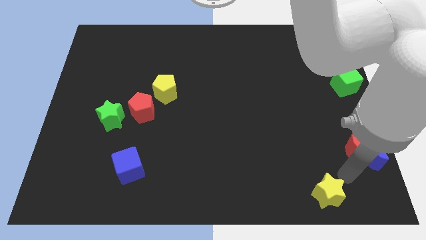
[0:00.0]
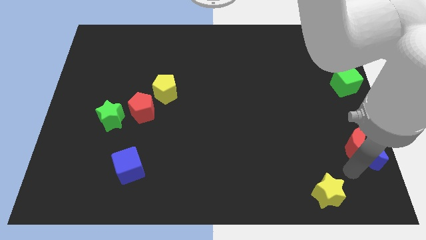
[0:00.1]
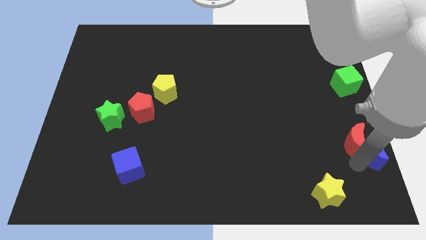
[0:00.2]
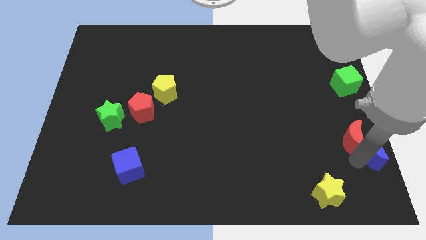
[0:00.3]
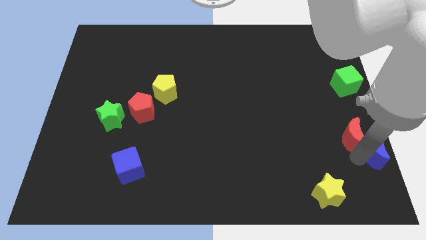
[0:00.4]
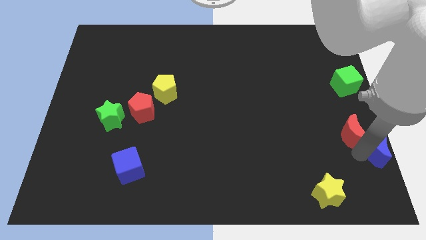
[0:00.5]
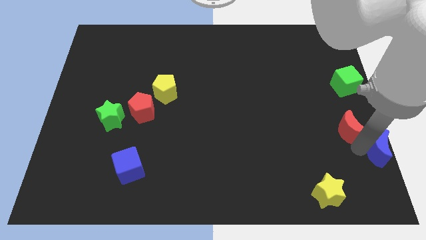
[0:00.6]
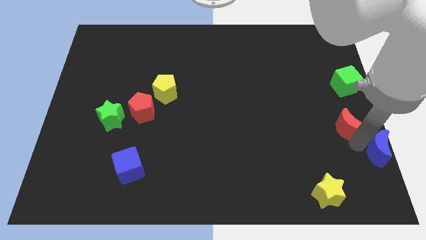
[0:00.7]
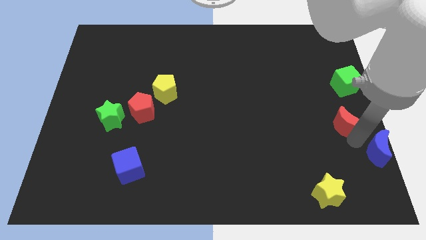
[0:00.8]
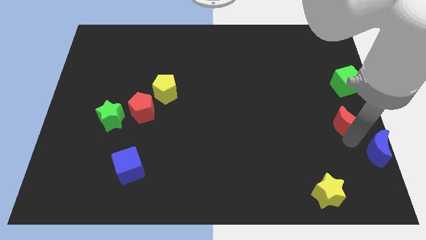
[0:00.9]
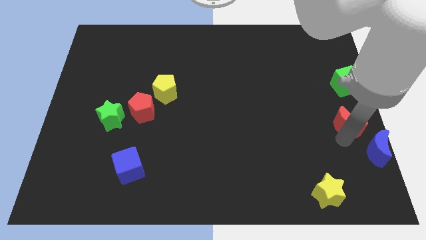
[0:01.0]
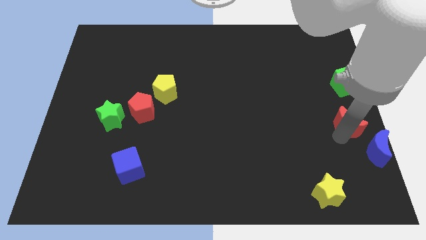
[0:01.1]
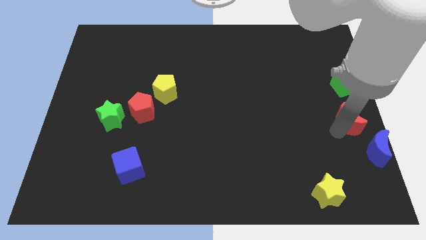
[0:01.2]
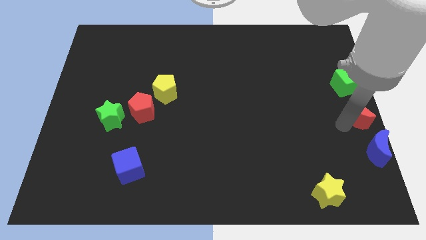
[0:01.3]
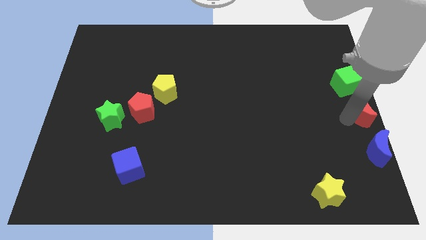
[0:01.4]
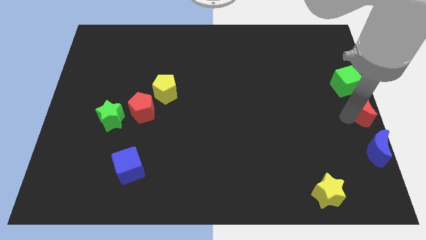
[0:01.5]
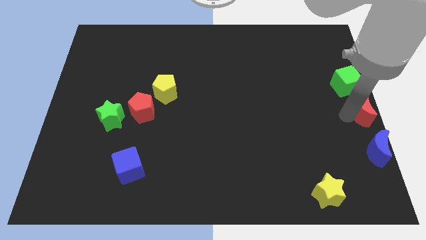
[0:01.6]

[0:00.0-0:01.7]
separate the red and blue crescents

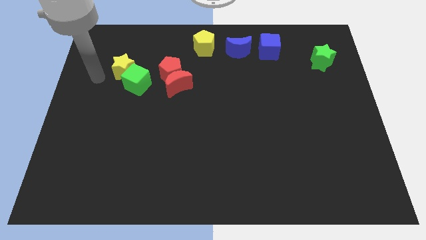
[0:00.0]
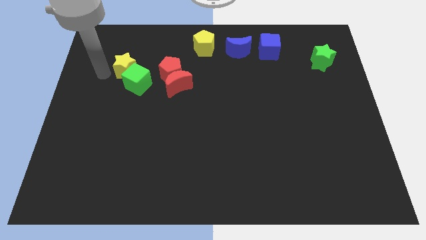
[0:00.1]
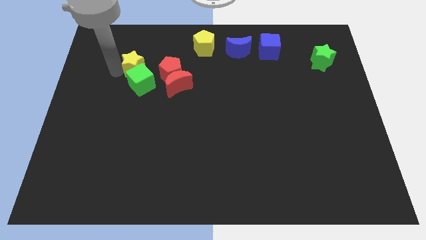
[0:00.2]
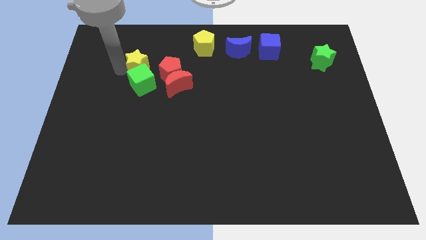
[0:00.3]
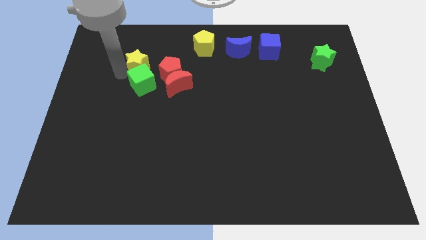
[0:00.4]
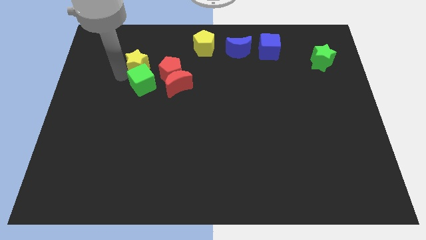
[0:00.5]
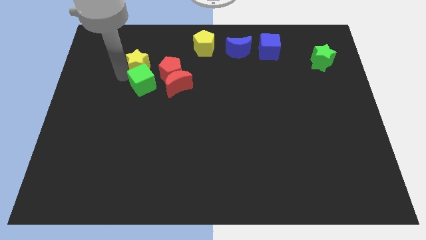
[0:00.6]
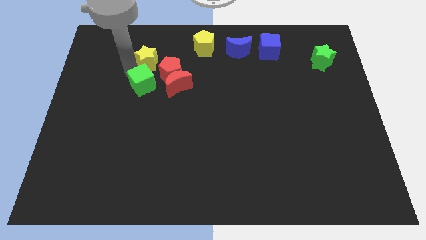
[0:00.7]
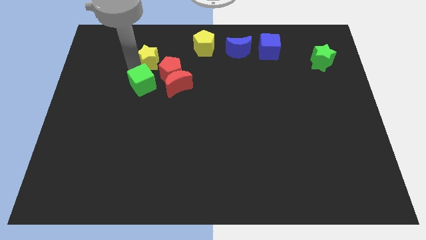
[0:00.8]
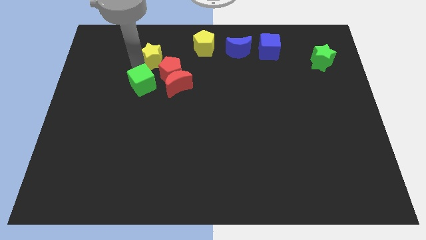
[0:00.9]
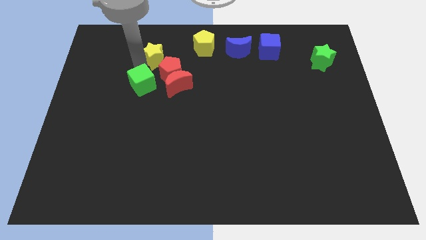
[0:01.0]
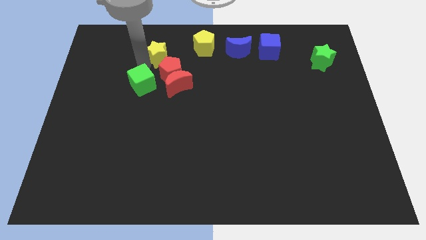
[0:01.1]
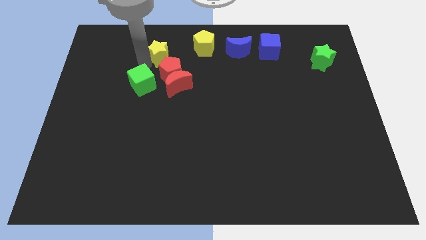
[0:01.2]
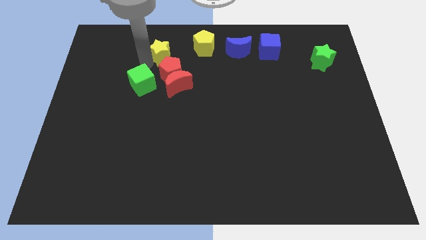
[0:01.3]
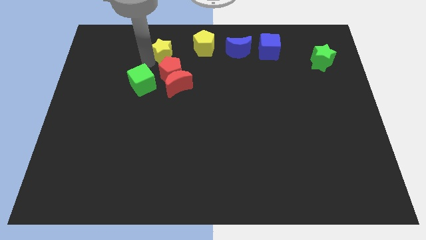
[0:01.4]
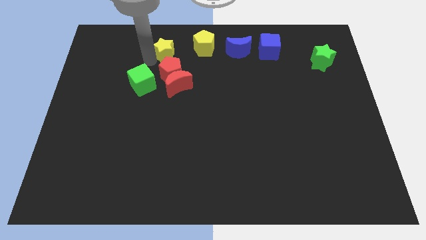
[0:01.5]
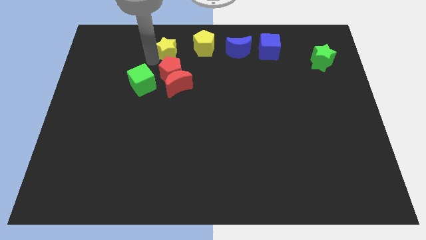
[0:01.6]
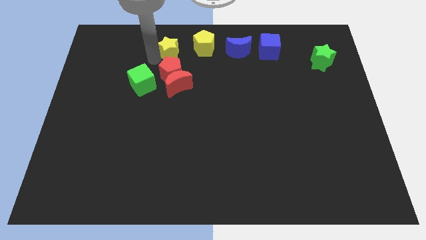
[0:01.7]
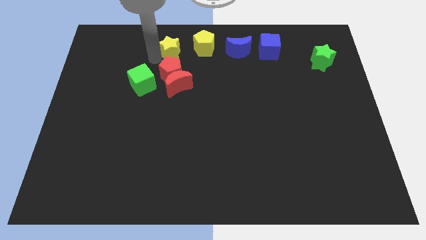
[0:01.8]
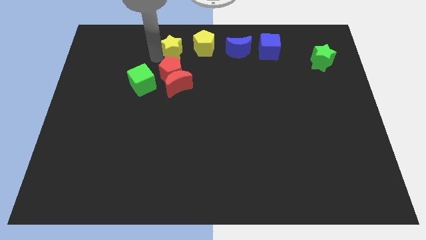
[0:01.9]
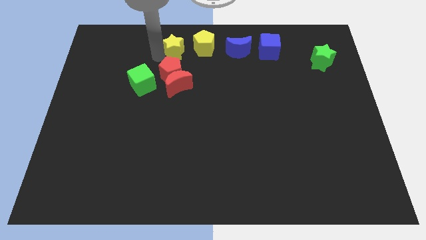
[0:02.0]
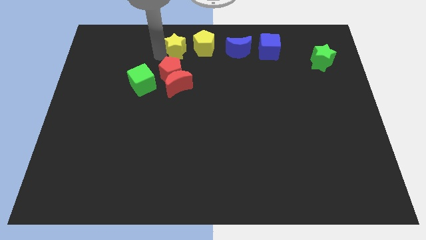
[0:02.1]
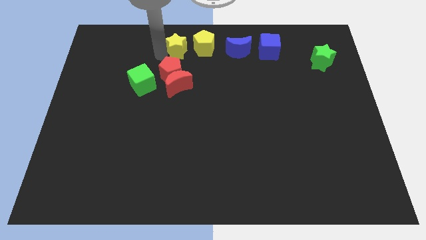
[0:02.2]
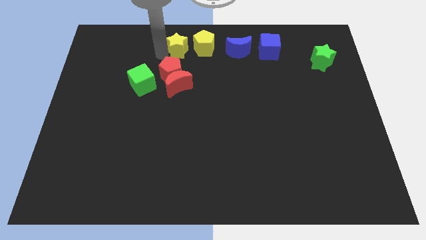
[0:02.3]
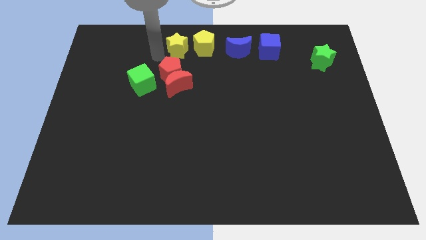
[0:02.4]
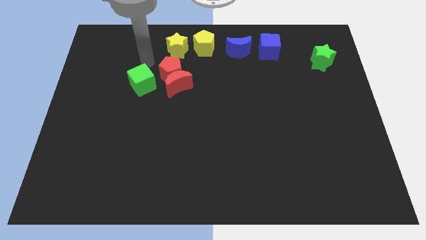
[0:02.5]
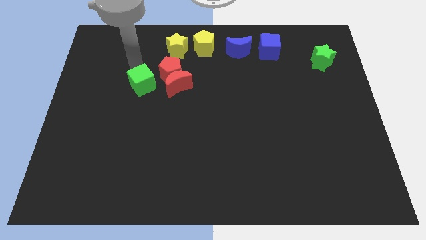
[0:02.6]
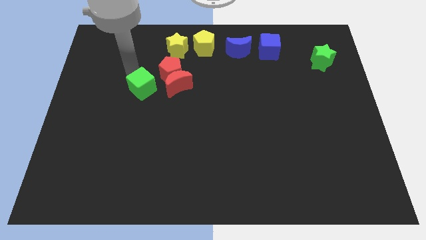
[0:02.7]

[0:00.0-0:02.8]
move the yellow star to the left of the yellow pentagon

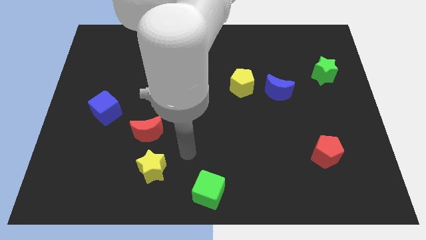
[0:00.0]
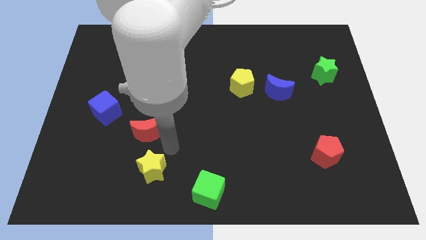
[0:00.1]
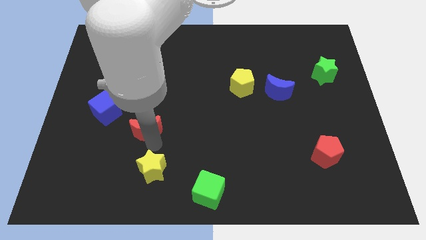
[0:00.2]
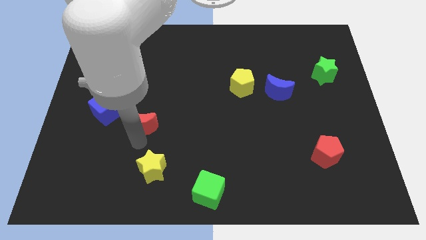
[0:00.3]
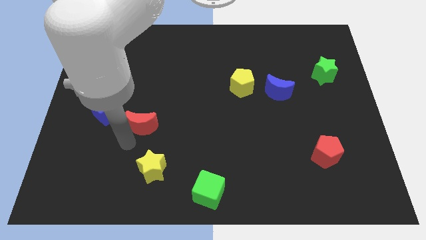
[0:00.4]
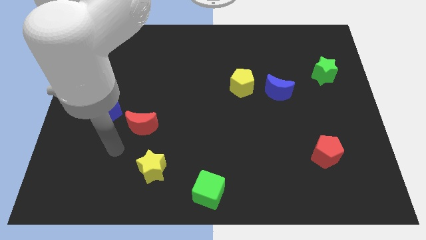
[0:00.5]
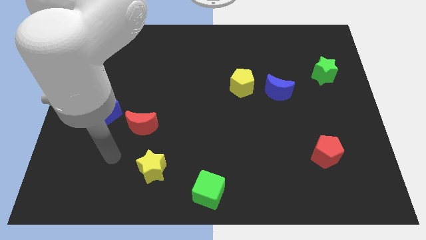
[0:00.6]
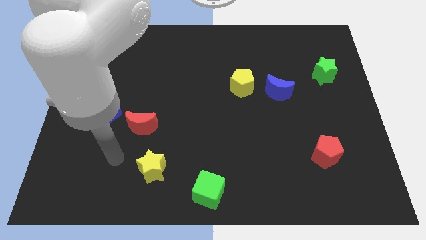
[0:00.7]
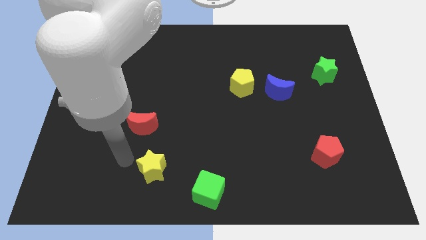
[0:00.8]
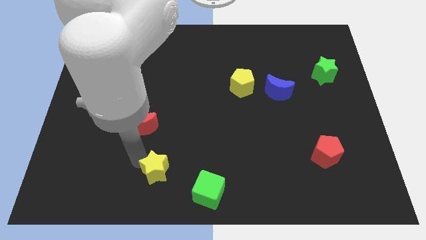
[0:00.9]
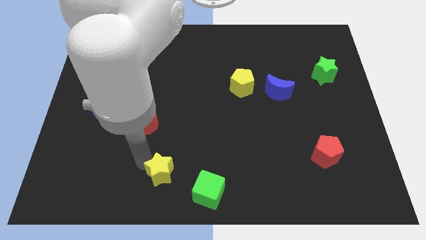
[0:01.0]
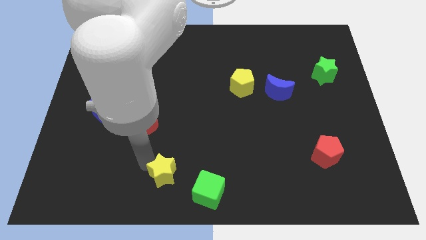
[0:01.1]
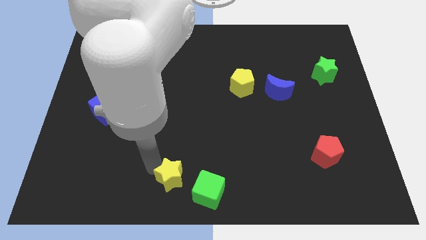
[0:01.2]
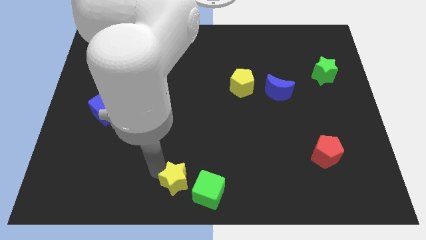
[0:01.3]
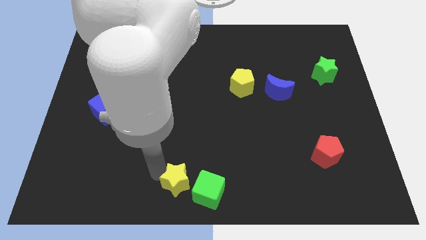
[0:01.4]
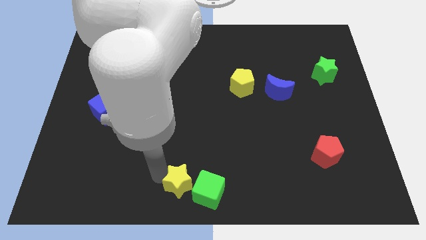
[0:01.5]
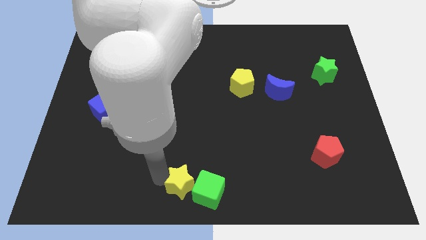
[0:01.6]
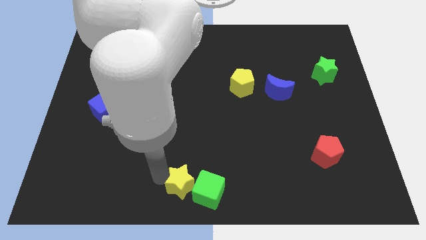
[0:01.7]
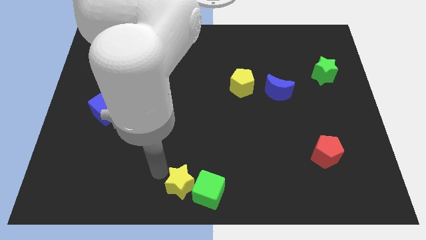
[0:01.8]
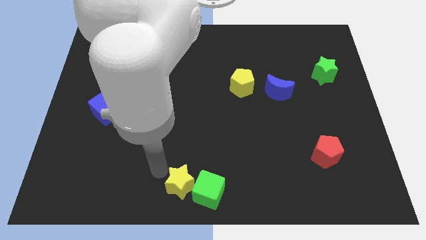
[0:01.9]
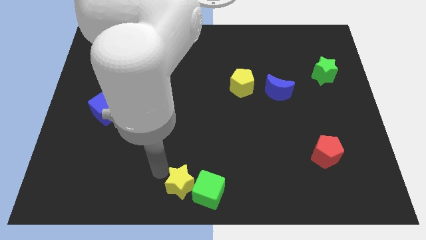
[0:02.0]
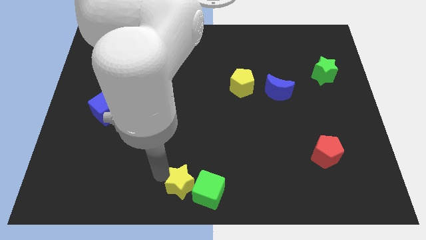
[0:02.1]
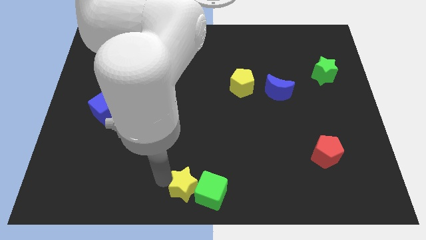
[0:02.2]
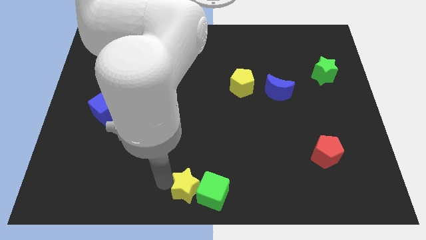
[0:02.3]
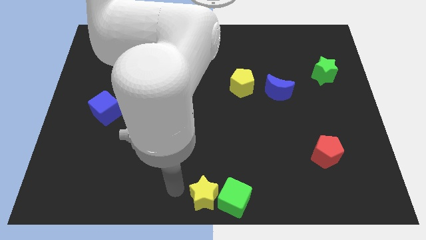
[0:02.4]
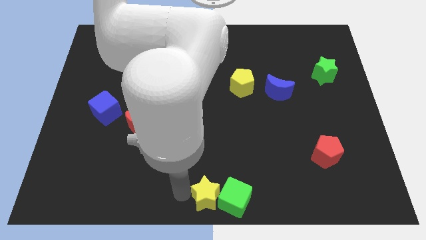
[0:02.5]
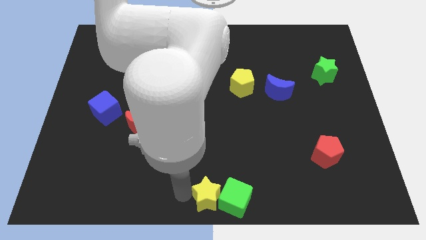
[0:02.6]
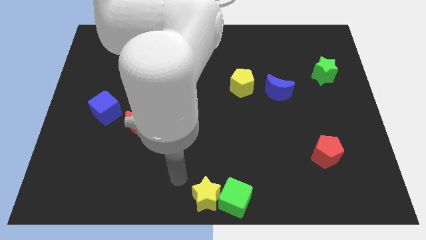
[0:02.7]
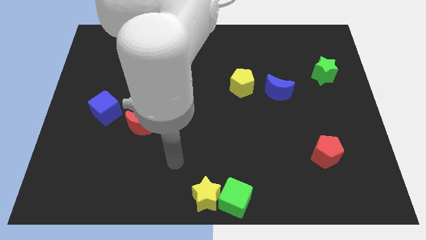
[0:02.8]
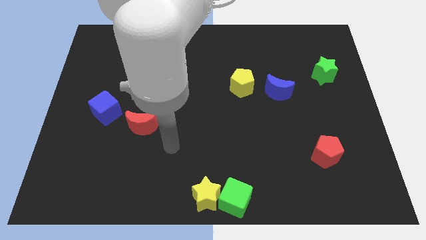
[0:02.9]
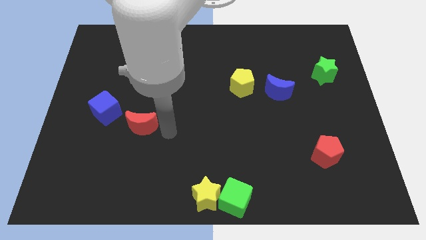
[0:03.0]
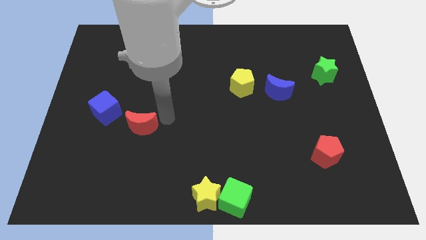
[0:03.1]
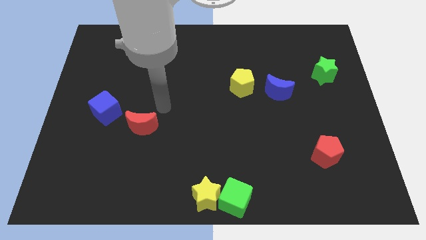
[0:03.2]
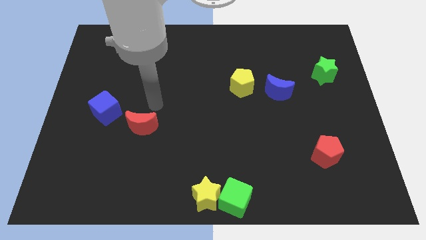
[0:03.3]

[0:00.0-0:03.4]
move the yellow star to the bottom center of board

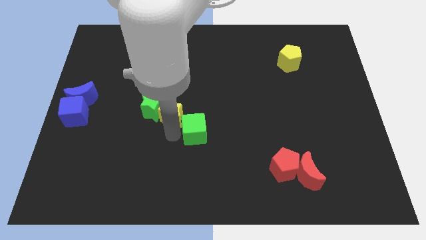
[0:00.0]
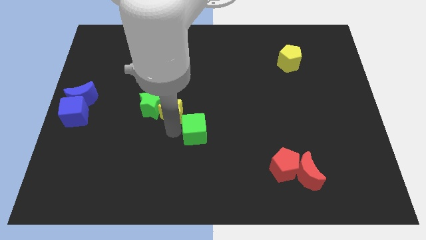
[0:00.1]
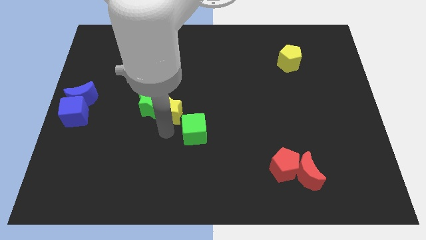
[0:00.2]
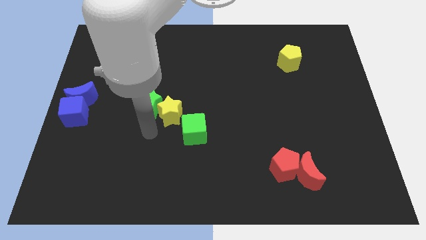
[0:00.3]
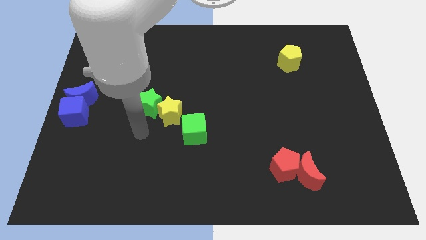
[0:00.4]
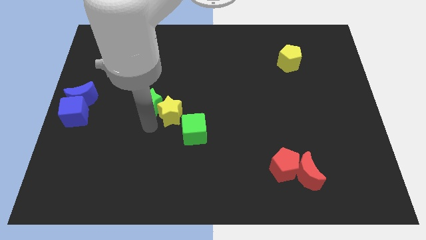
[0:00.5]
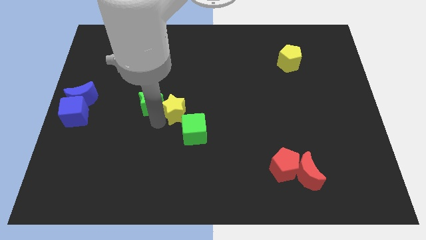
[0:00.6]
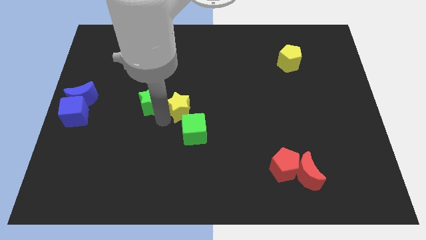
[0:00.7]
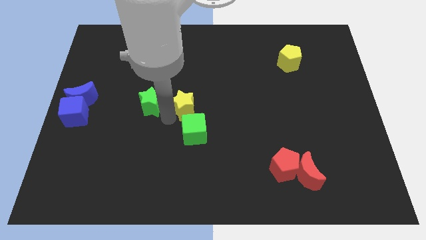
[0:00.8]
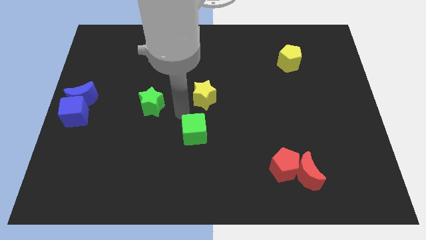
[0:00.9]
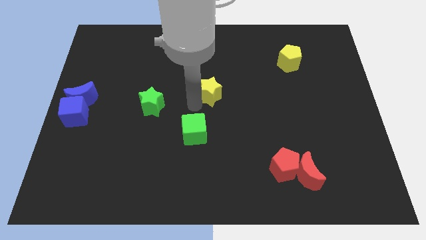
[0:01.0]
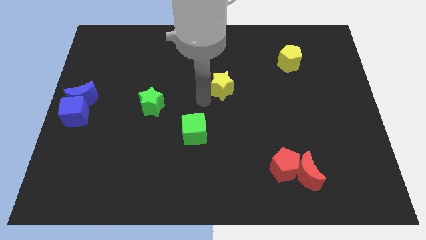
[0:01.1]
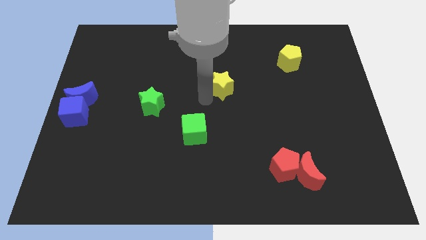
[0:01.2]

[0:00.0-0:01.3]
move yellow star away from the green star
